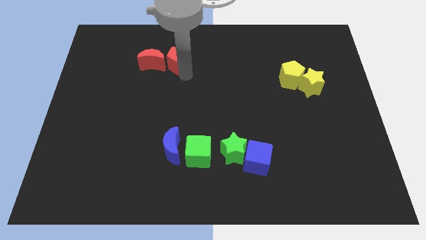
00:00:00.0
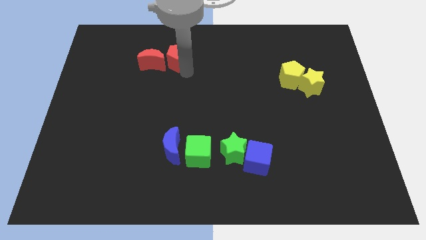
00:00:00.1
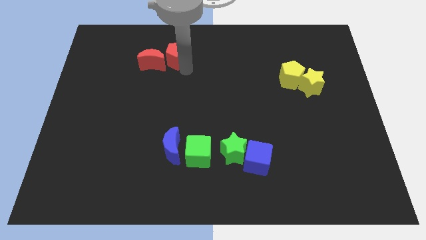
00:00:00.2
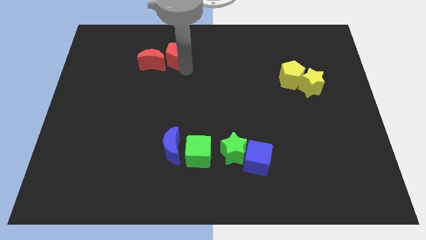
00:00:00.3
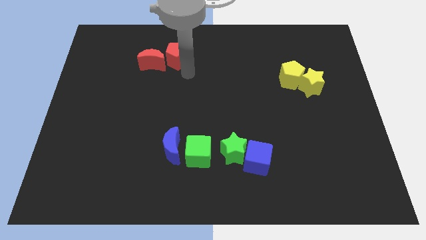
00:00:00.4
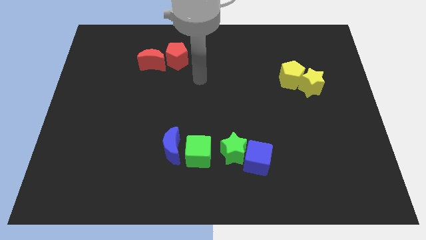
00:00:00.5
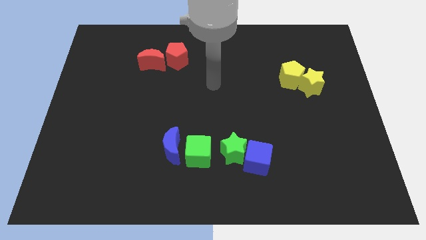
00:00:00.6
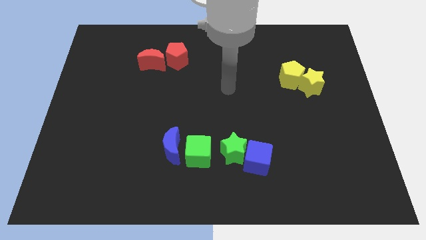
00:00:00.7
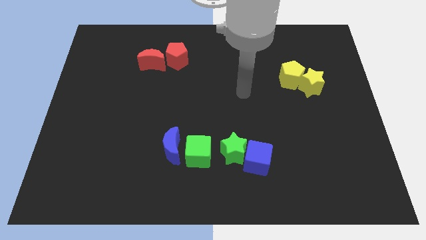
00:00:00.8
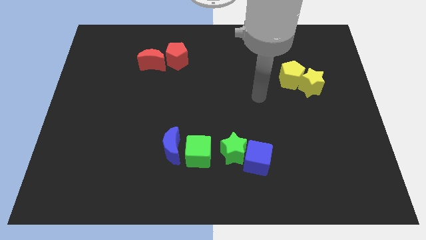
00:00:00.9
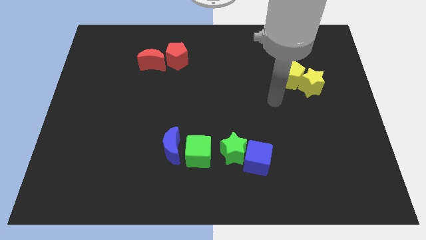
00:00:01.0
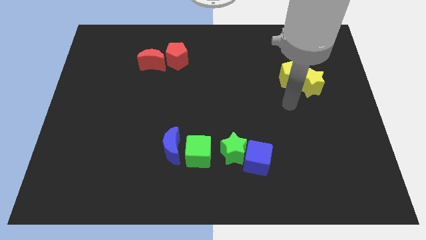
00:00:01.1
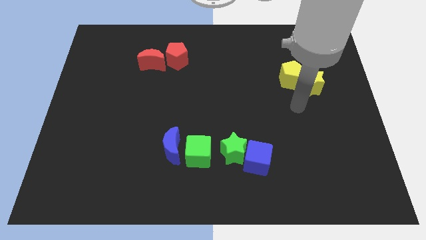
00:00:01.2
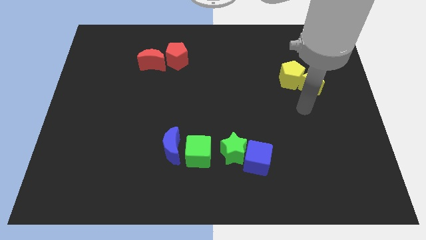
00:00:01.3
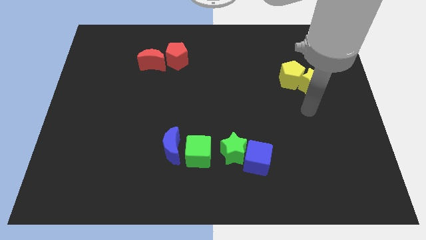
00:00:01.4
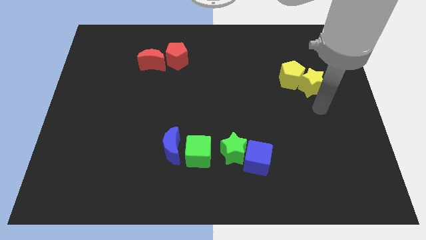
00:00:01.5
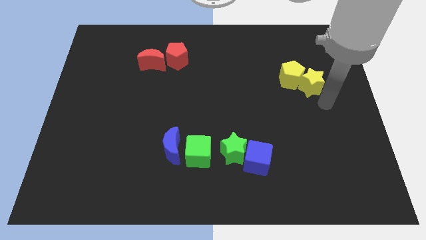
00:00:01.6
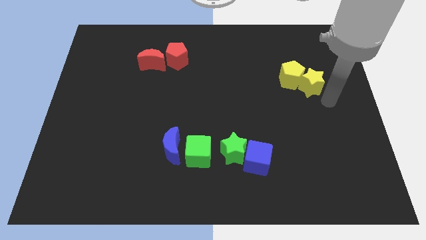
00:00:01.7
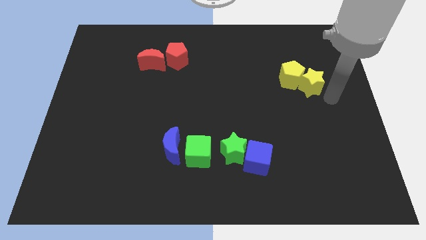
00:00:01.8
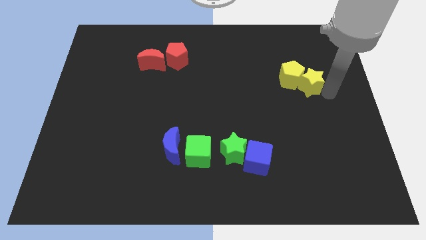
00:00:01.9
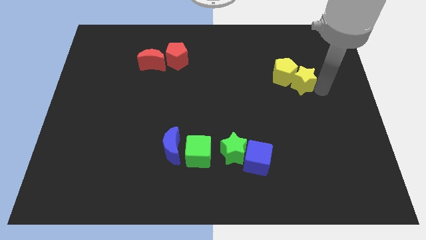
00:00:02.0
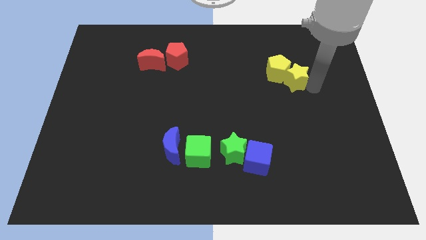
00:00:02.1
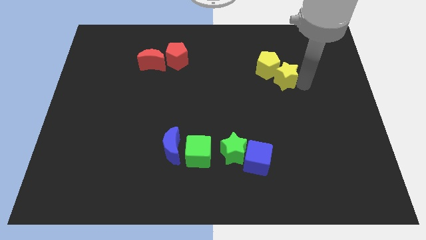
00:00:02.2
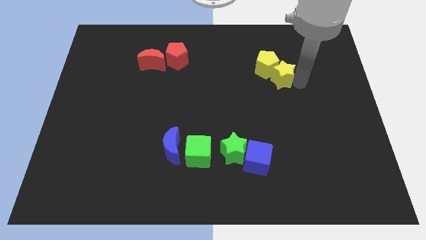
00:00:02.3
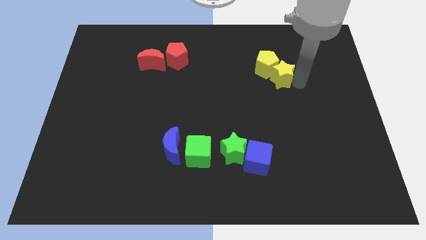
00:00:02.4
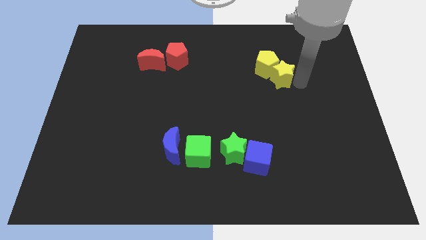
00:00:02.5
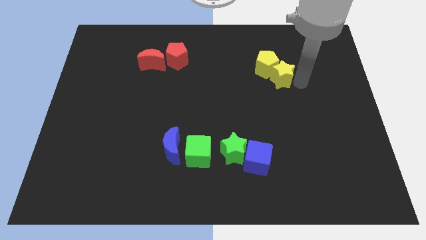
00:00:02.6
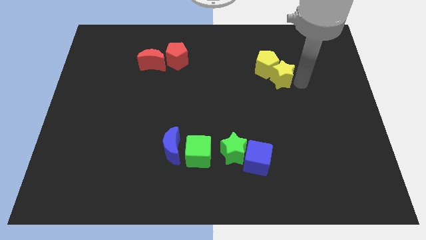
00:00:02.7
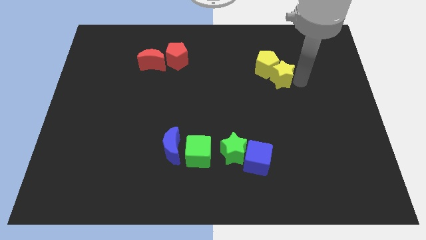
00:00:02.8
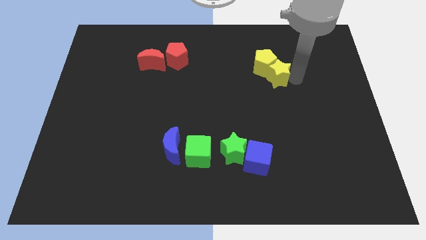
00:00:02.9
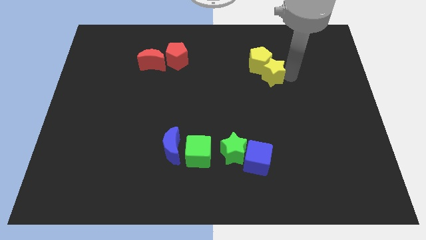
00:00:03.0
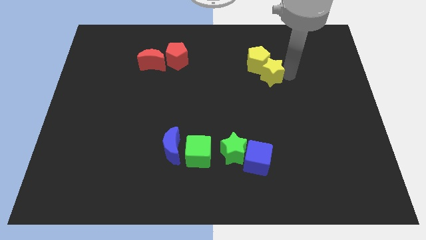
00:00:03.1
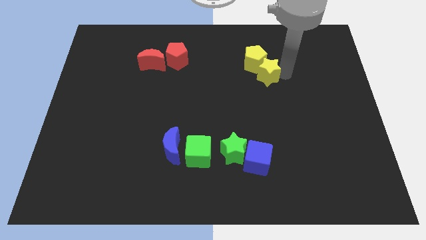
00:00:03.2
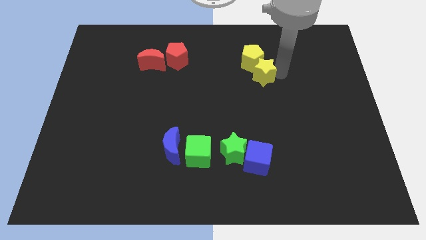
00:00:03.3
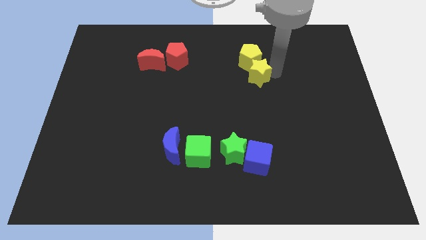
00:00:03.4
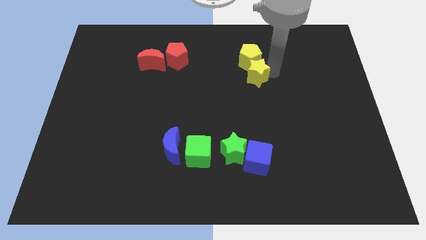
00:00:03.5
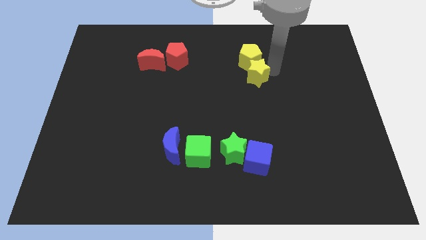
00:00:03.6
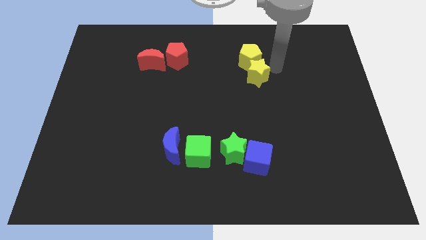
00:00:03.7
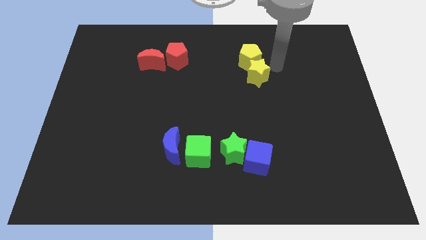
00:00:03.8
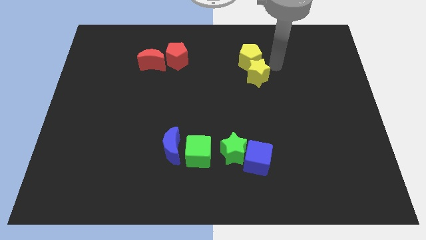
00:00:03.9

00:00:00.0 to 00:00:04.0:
push the yellow pentagon to the top side of the board with the yellow star

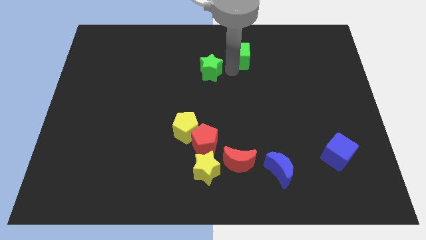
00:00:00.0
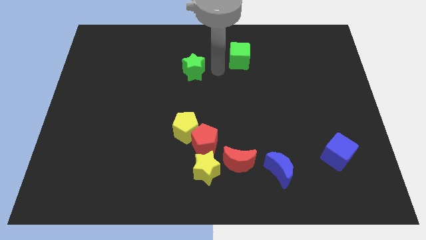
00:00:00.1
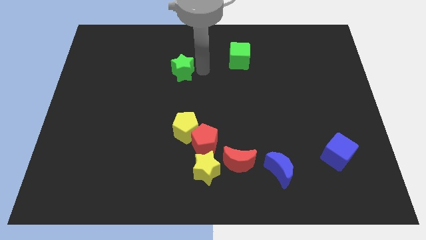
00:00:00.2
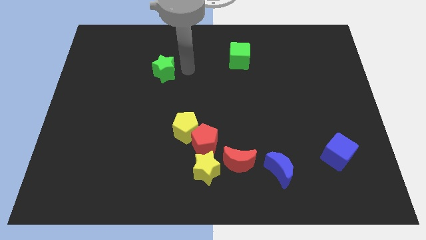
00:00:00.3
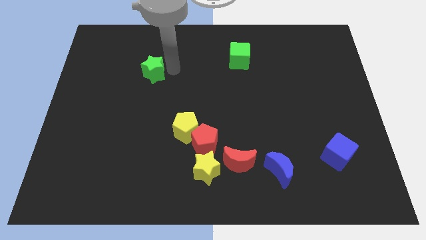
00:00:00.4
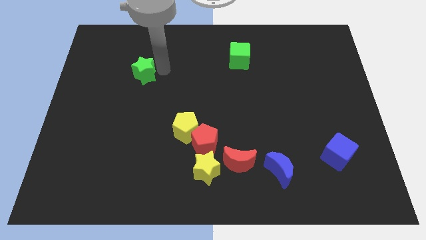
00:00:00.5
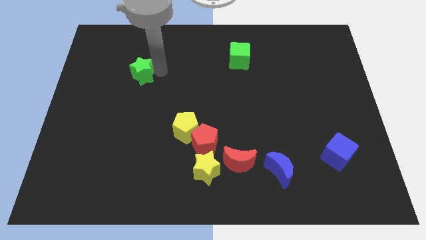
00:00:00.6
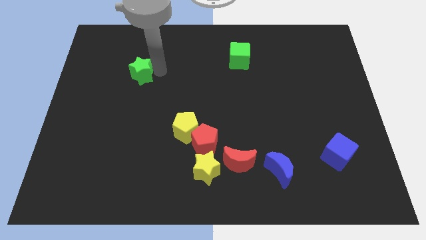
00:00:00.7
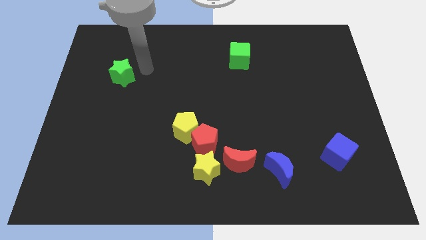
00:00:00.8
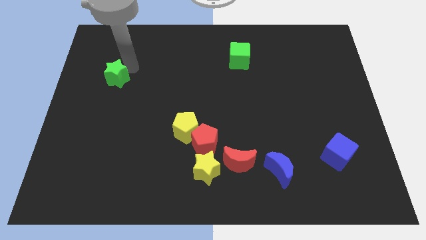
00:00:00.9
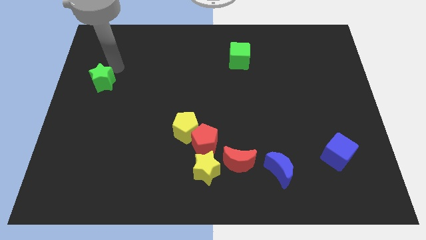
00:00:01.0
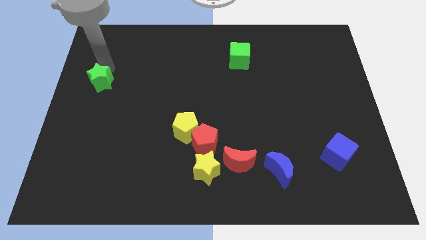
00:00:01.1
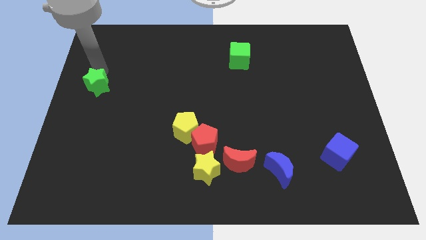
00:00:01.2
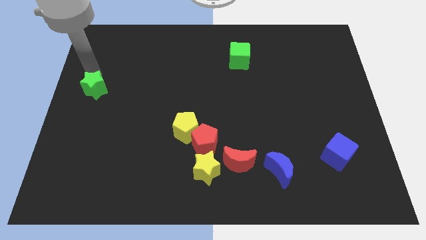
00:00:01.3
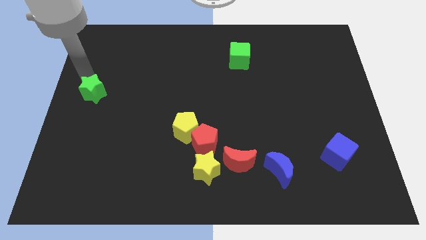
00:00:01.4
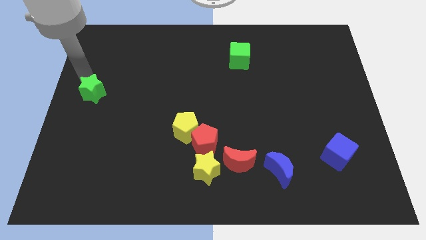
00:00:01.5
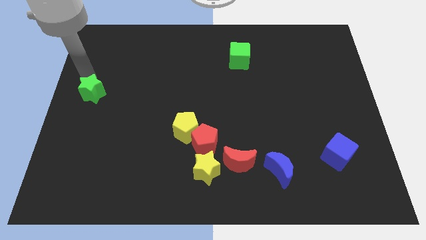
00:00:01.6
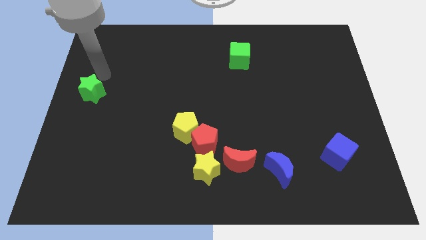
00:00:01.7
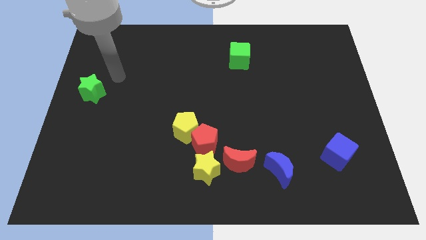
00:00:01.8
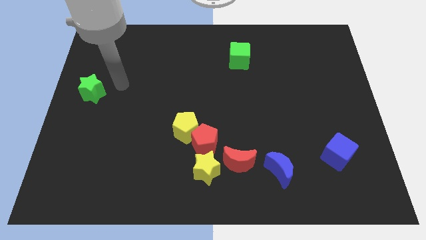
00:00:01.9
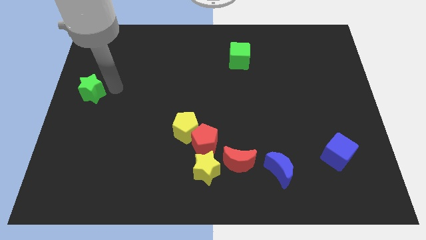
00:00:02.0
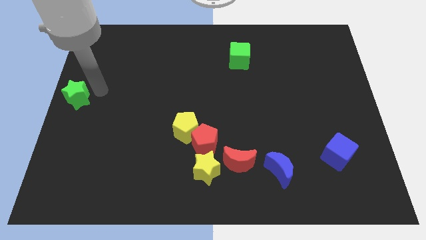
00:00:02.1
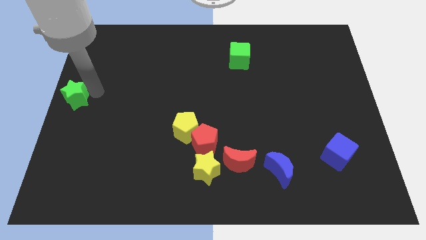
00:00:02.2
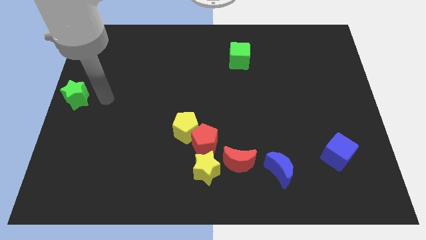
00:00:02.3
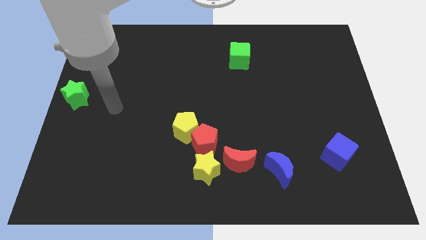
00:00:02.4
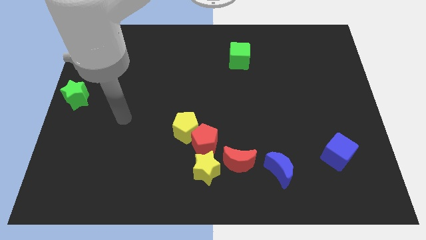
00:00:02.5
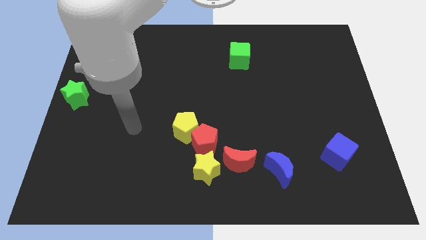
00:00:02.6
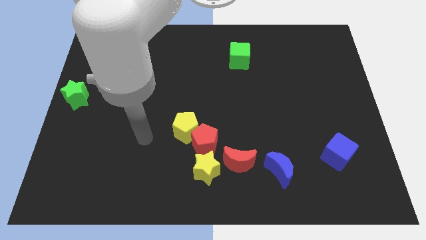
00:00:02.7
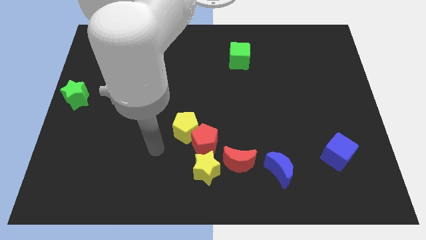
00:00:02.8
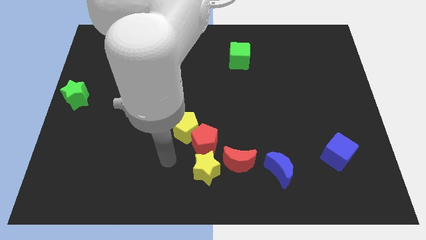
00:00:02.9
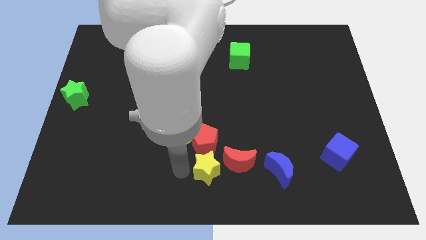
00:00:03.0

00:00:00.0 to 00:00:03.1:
place the green star to the left center of the board

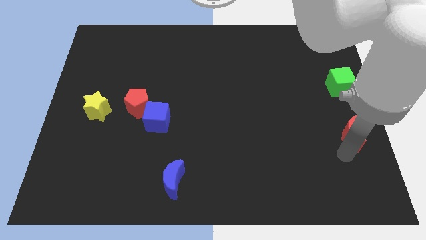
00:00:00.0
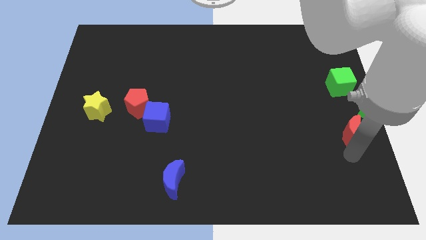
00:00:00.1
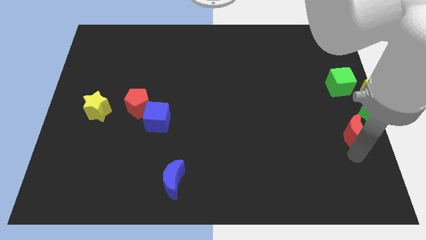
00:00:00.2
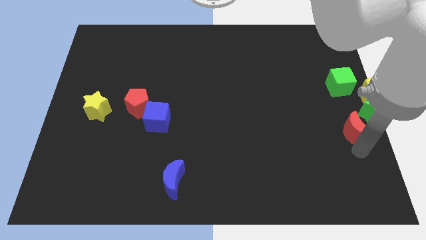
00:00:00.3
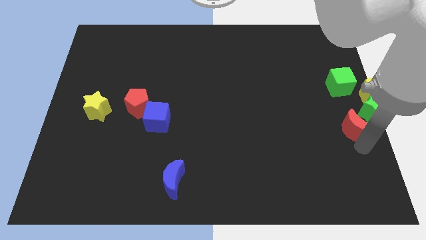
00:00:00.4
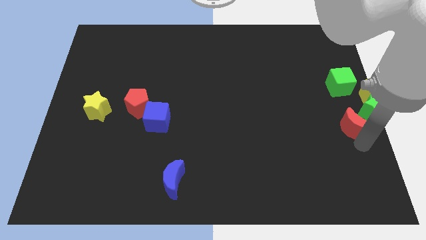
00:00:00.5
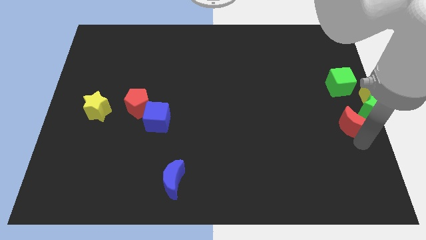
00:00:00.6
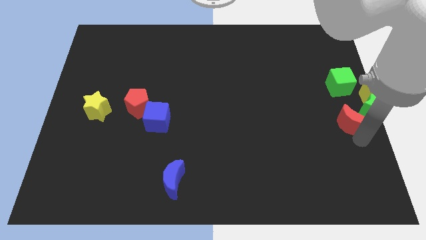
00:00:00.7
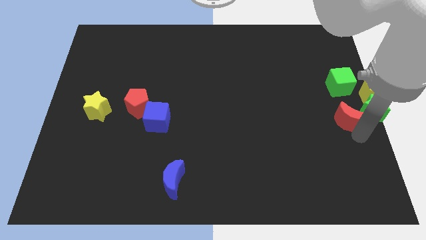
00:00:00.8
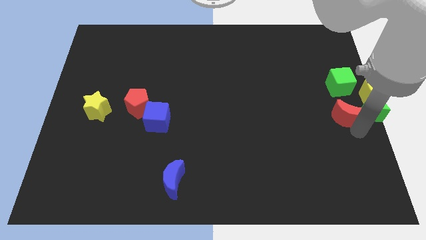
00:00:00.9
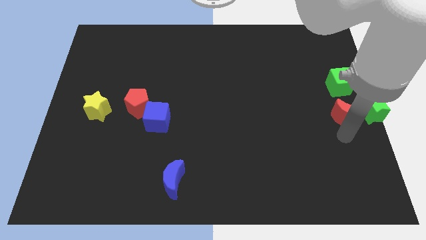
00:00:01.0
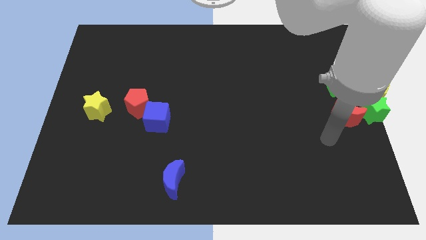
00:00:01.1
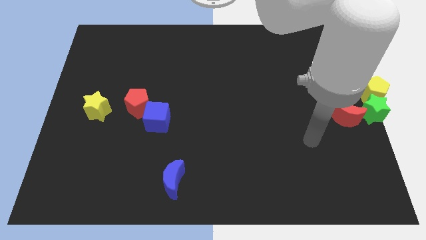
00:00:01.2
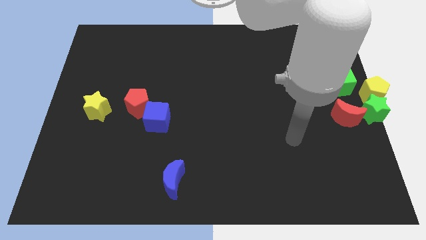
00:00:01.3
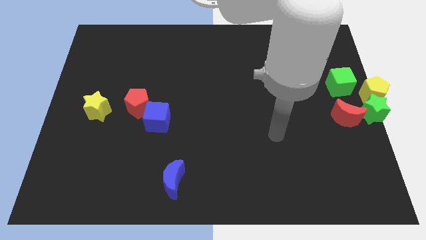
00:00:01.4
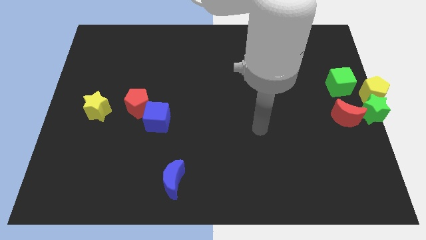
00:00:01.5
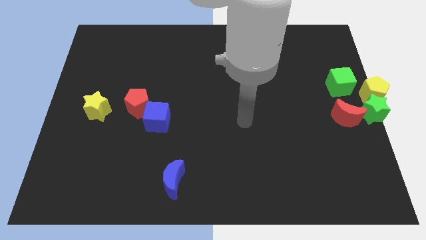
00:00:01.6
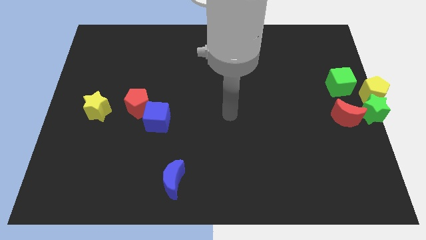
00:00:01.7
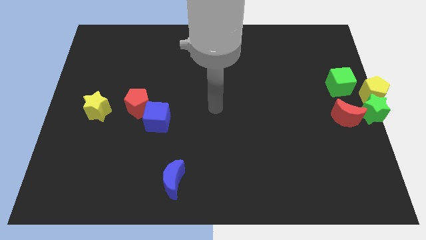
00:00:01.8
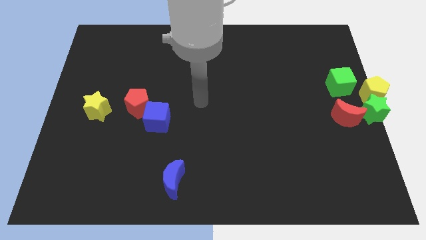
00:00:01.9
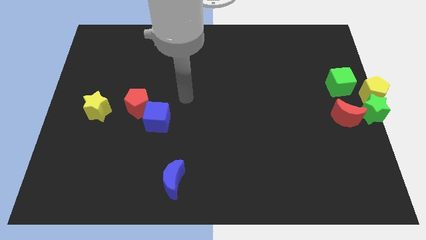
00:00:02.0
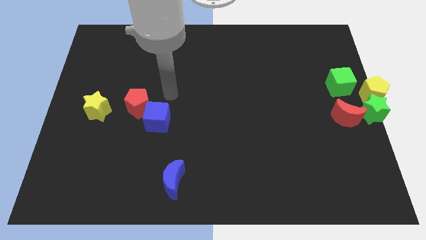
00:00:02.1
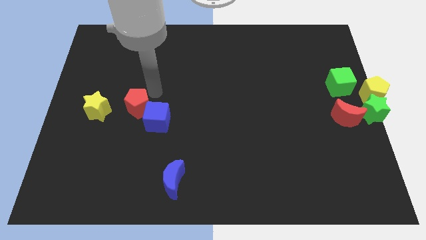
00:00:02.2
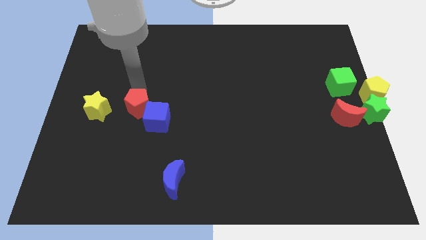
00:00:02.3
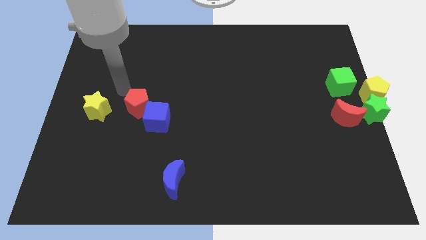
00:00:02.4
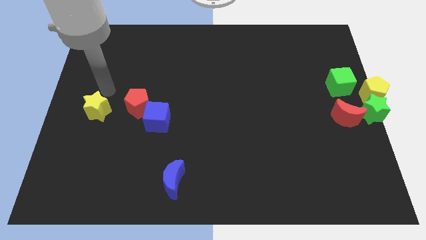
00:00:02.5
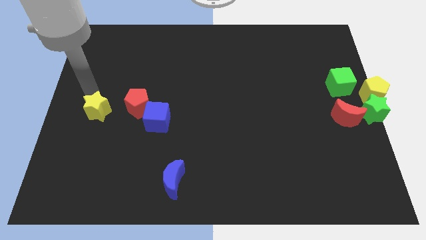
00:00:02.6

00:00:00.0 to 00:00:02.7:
push the red moon to the left of the green star
